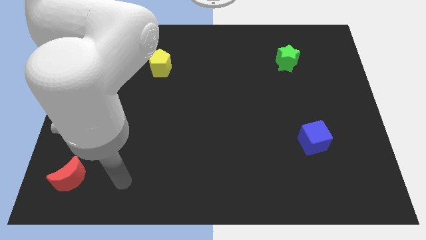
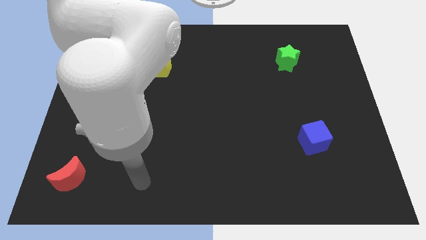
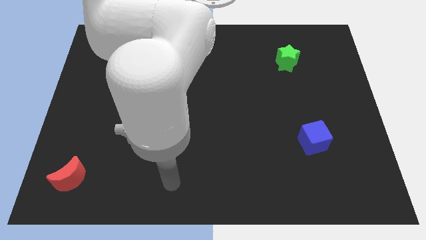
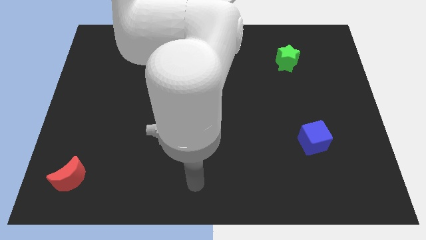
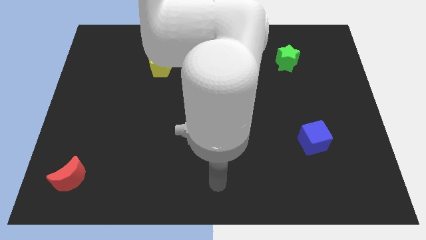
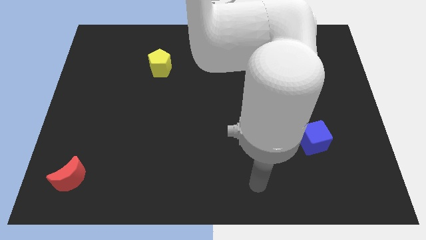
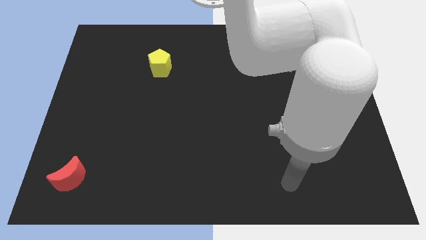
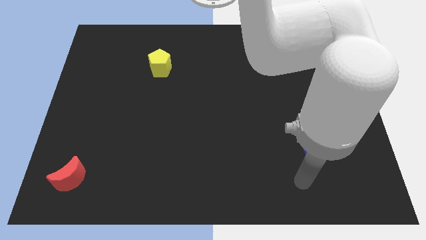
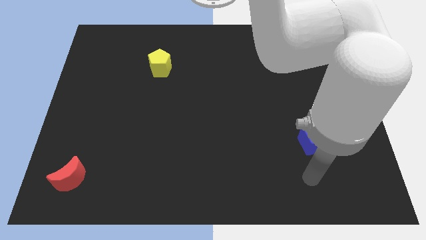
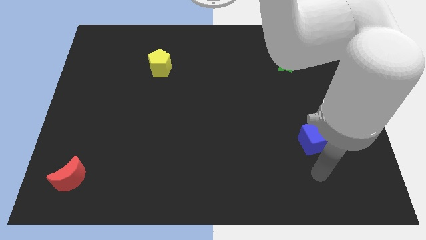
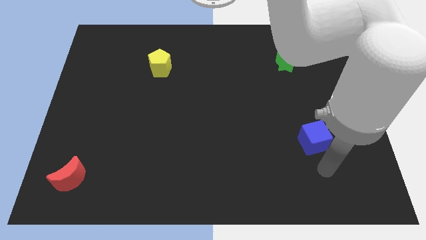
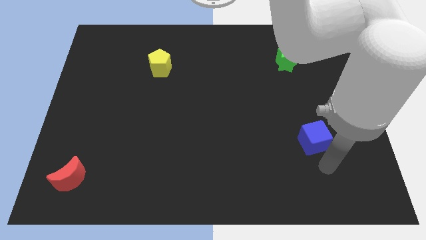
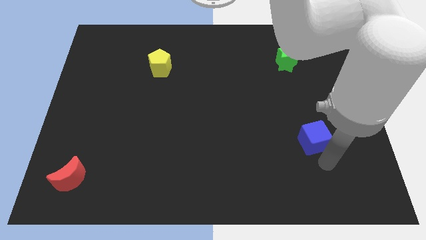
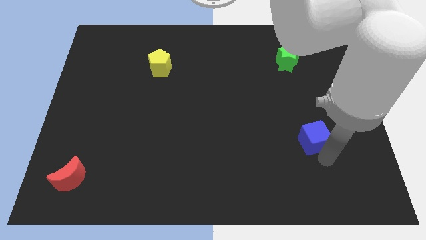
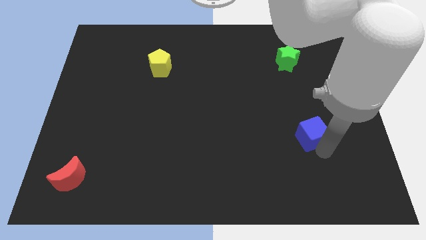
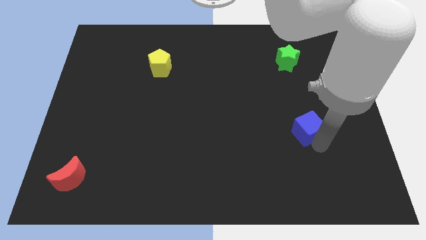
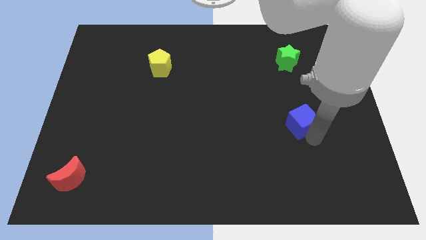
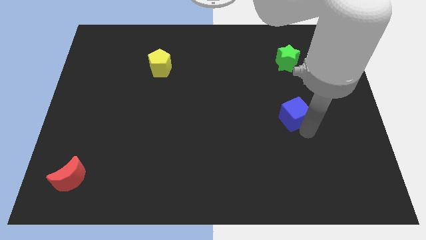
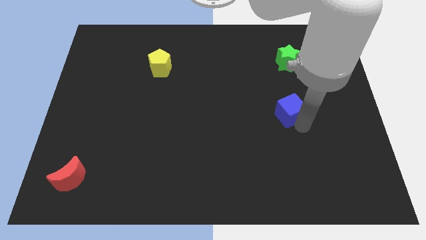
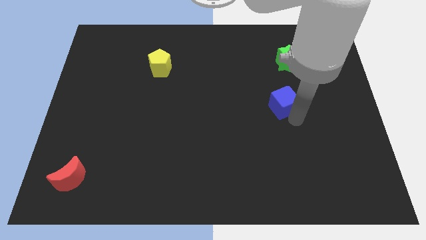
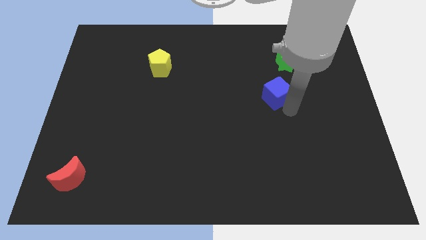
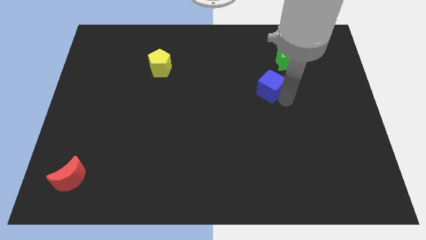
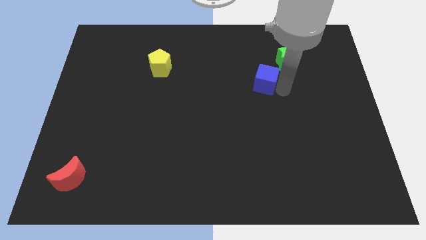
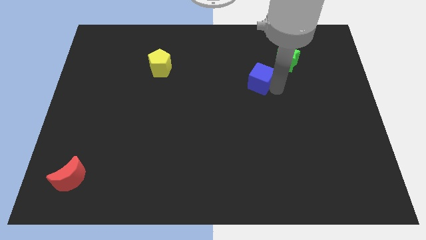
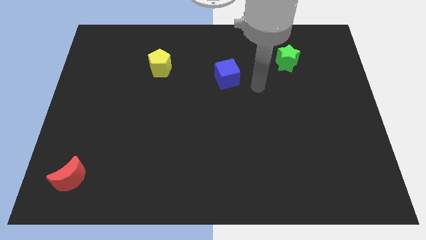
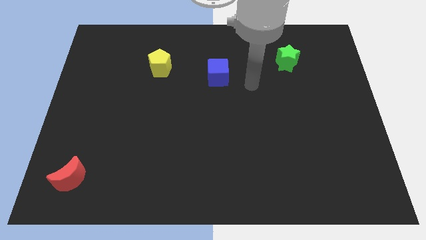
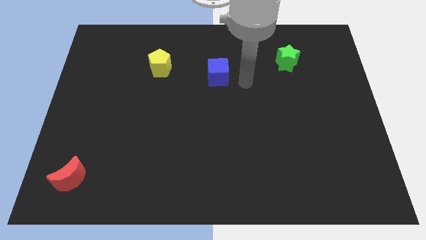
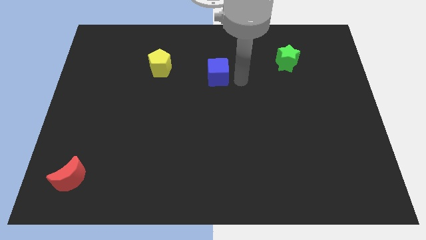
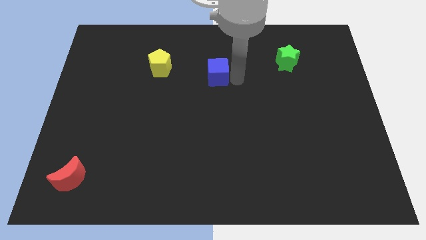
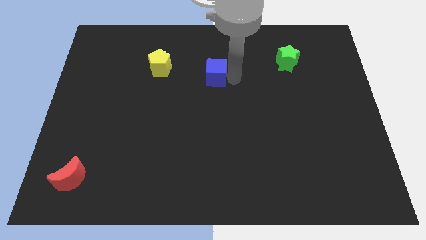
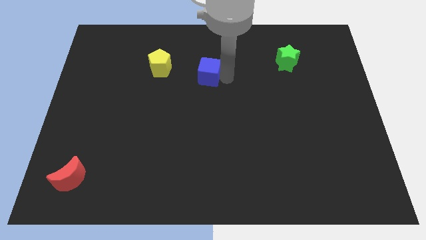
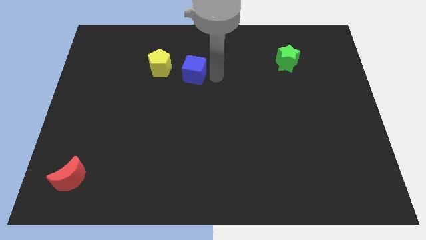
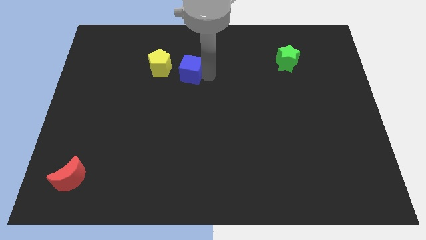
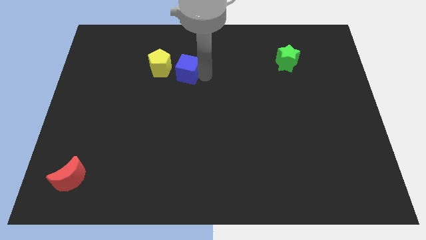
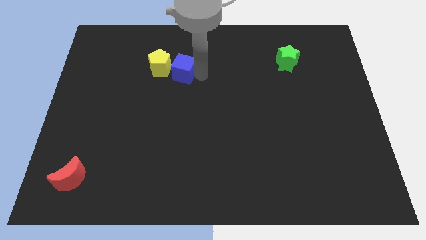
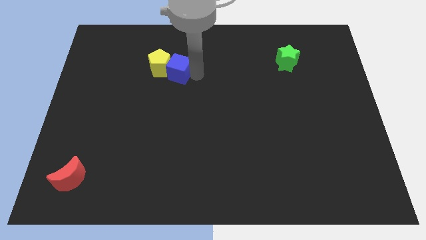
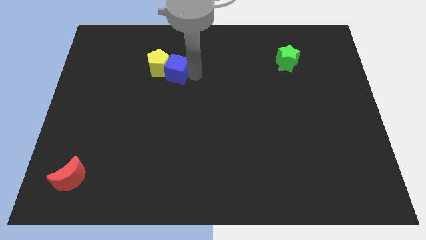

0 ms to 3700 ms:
put the cube close to the yellow pentagon

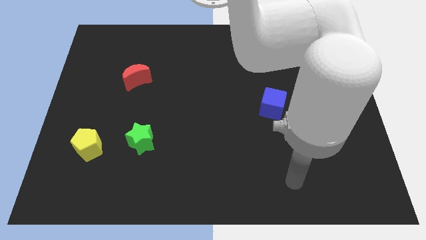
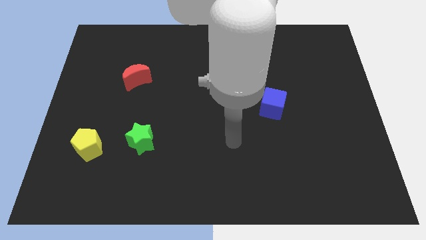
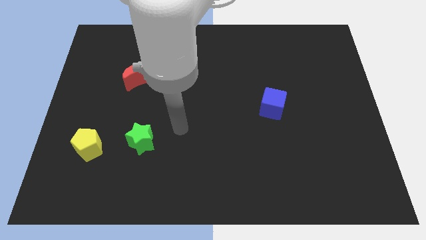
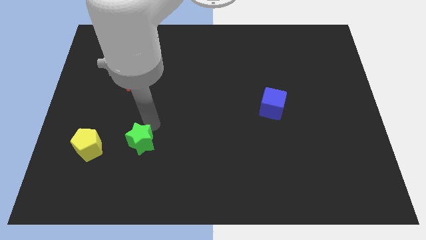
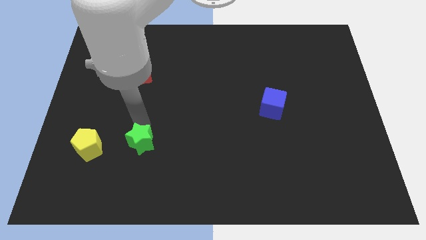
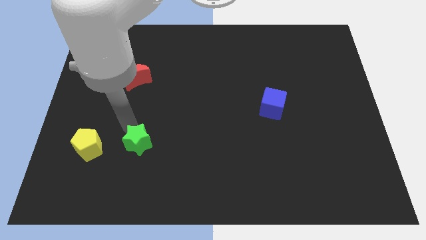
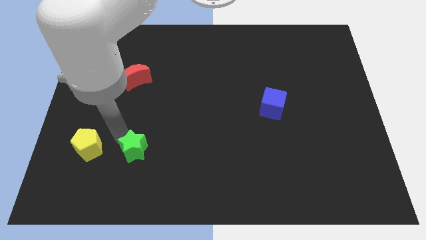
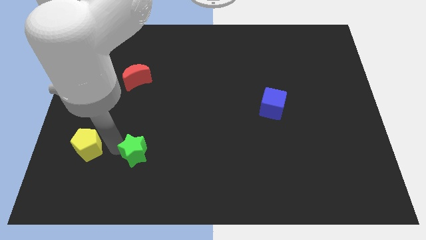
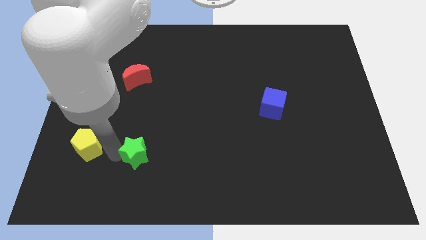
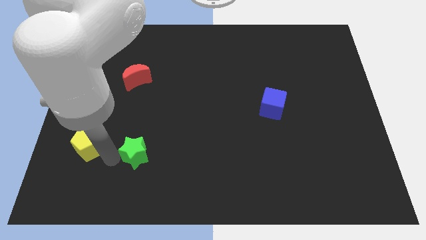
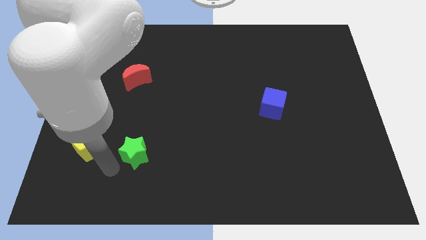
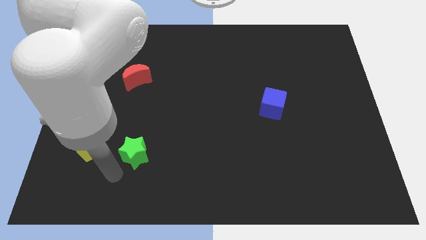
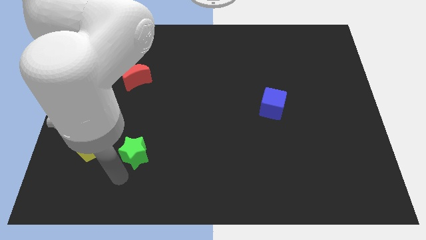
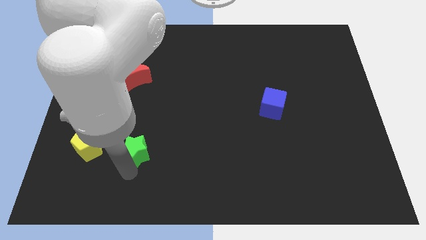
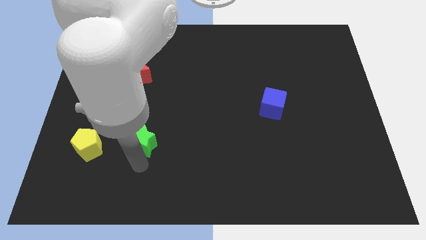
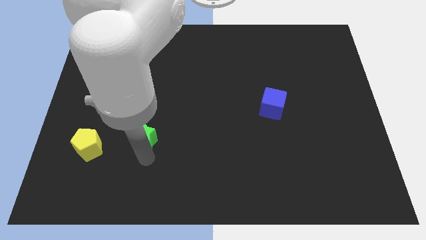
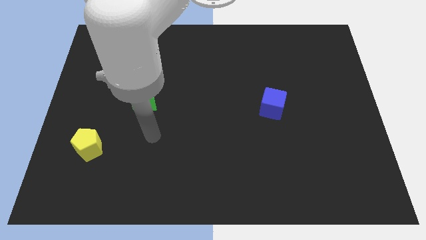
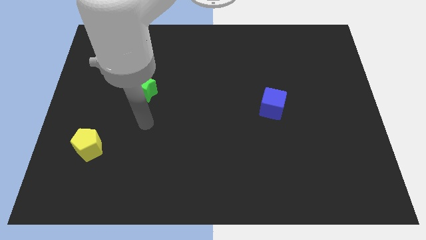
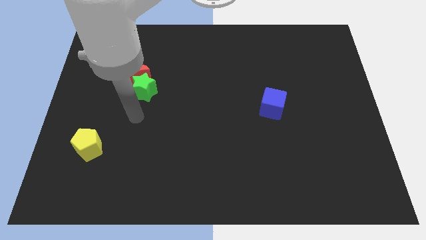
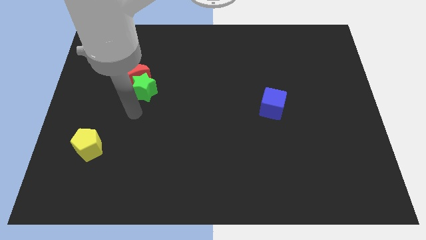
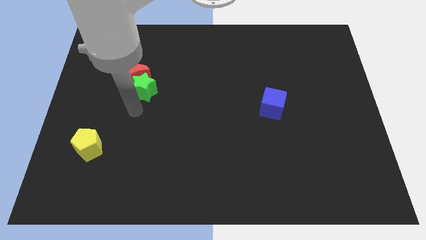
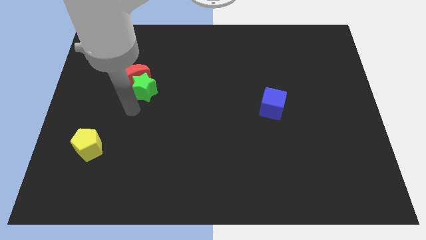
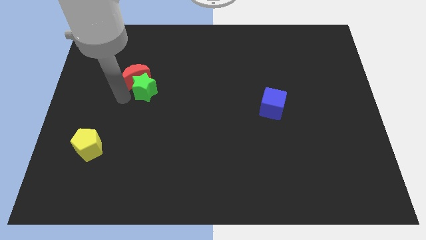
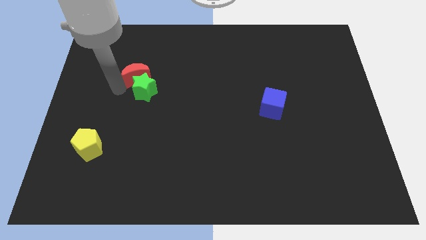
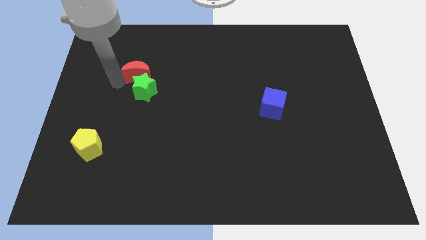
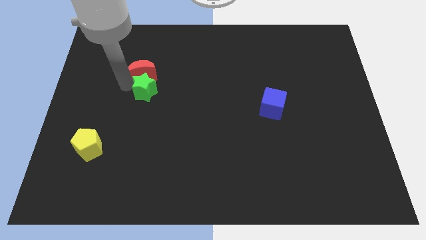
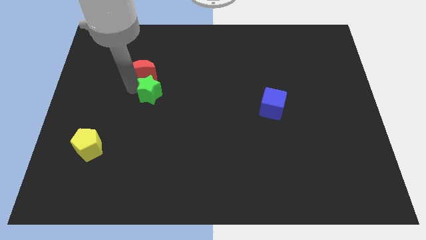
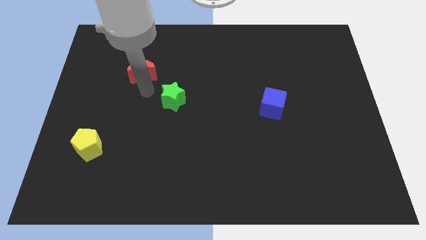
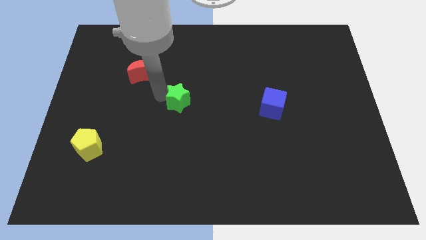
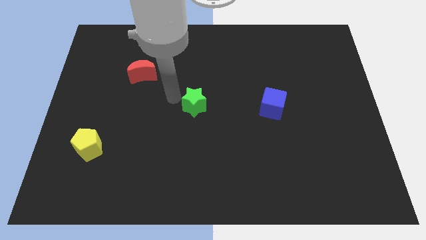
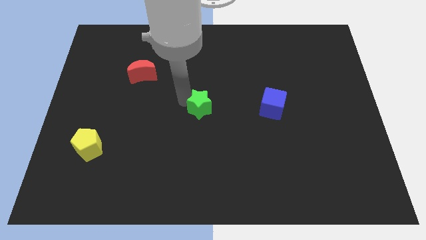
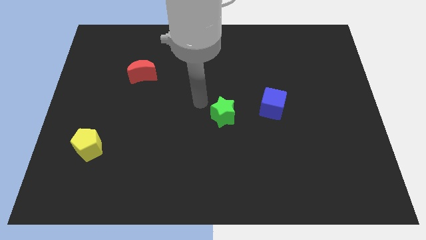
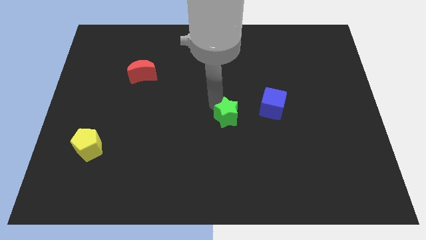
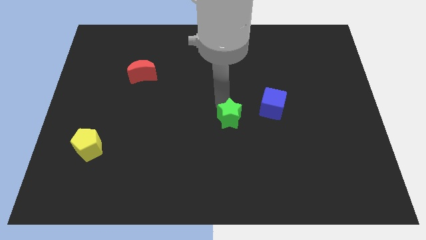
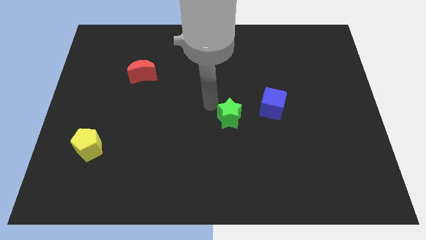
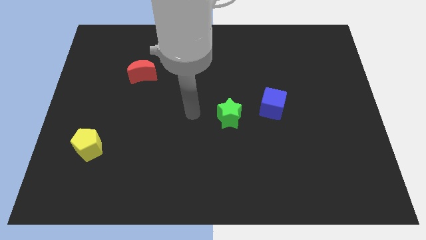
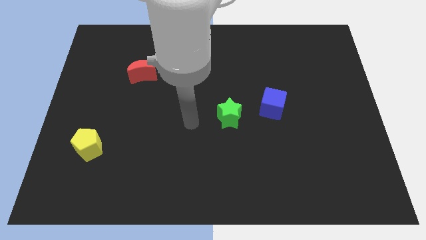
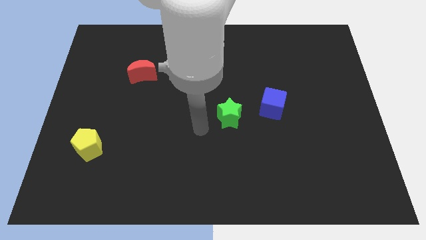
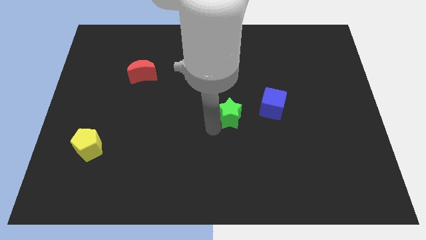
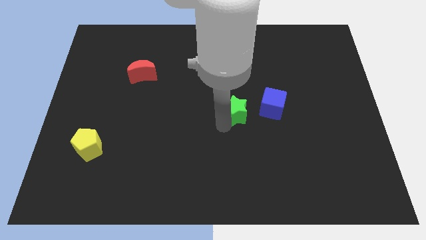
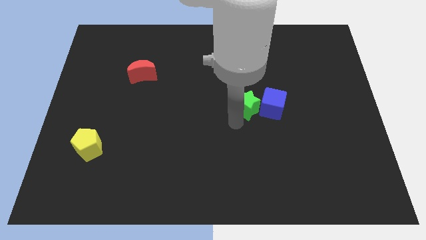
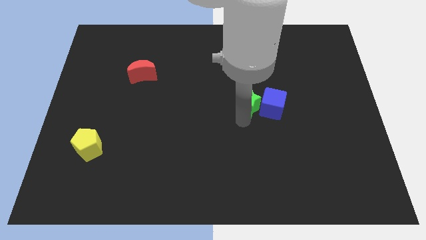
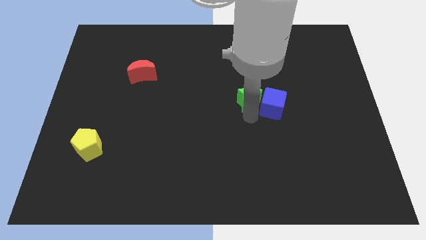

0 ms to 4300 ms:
move the star towards the blue block
